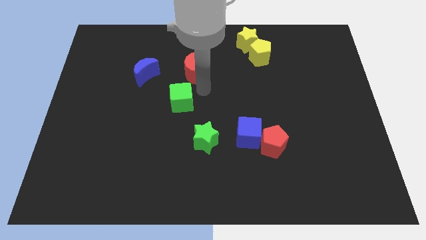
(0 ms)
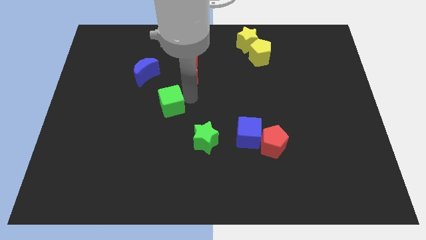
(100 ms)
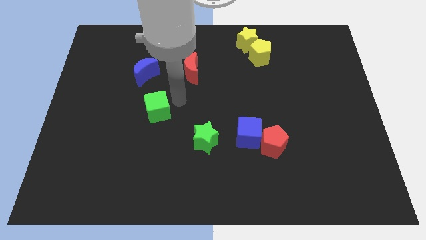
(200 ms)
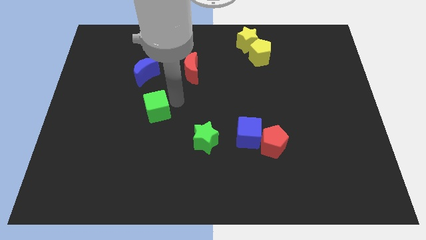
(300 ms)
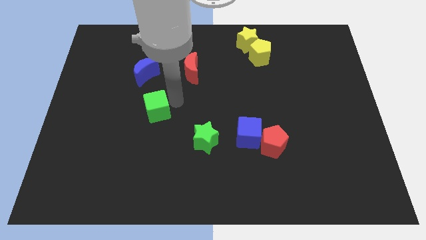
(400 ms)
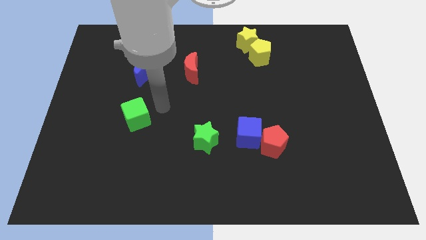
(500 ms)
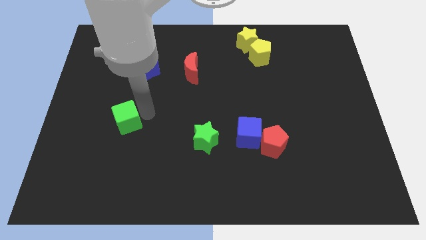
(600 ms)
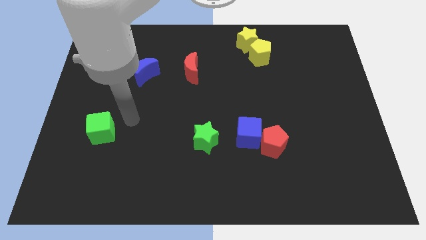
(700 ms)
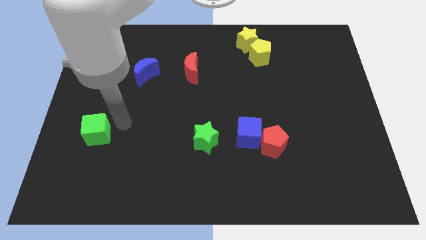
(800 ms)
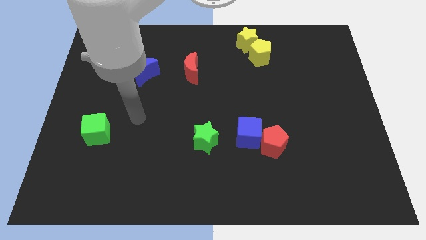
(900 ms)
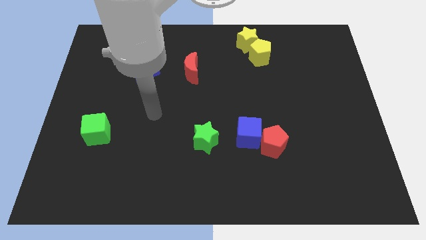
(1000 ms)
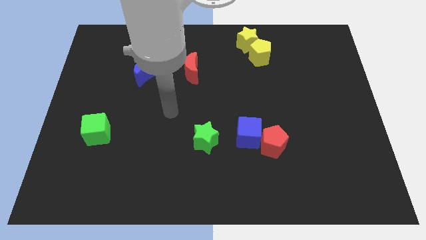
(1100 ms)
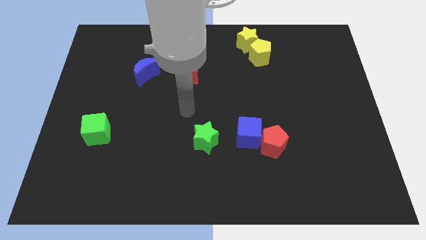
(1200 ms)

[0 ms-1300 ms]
drag the green cube to the left center of the board

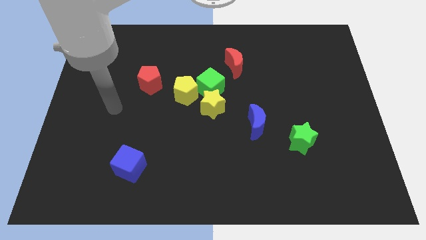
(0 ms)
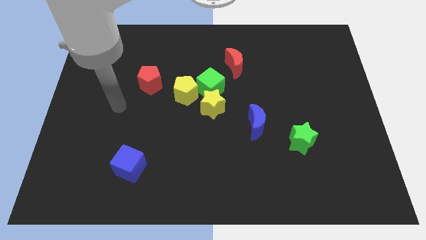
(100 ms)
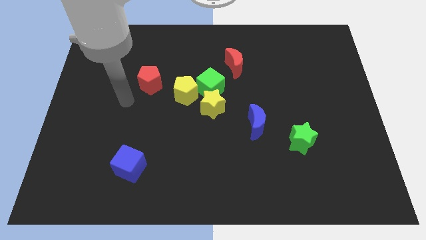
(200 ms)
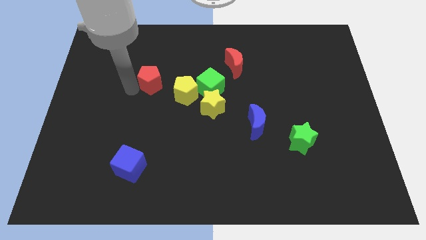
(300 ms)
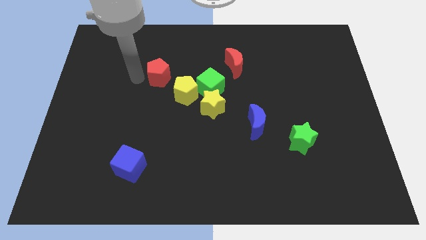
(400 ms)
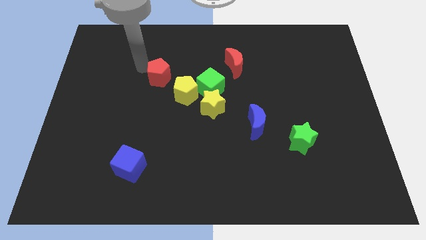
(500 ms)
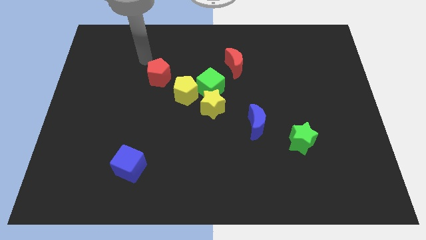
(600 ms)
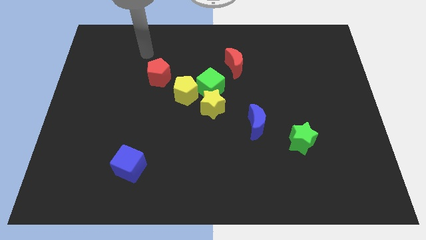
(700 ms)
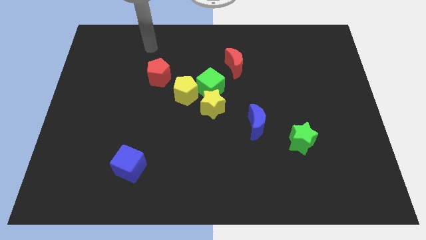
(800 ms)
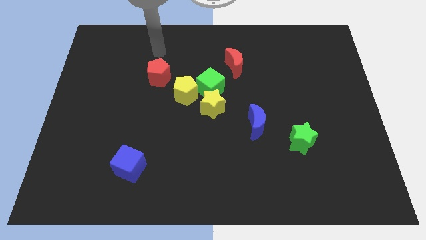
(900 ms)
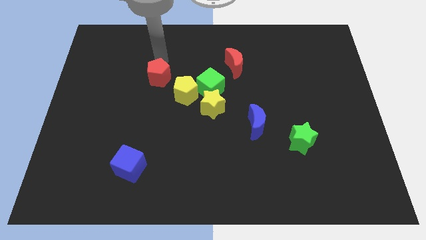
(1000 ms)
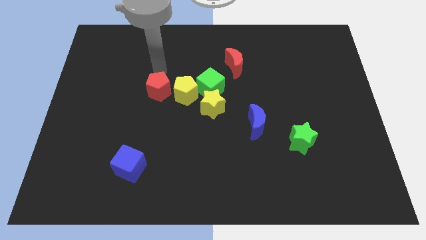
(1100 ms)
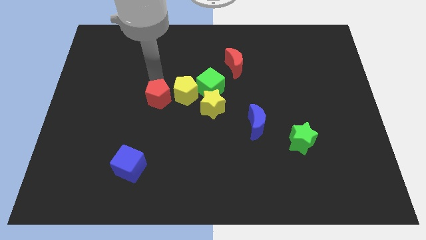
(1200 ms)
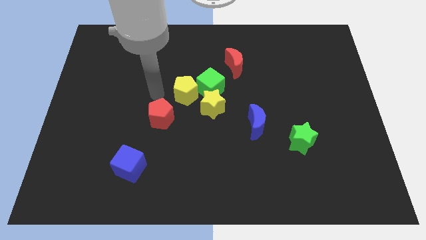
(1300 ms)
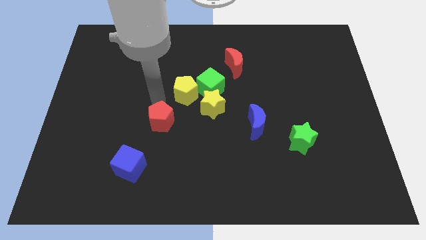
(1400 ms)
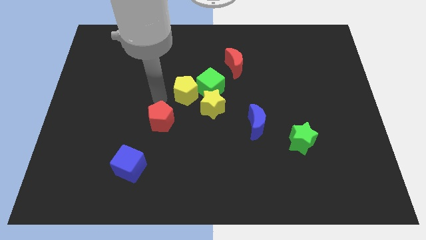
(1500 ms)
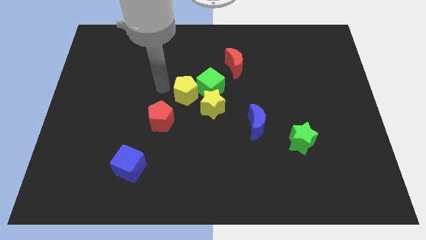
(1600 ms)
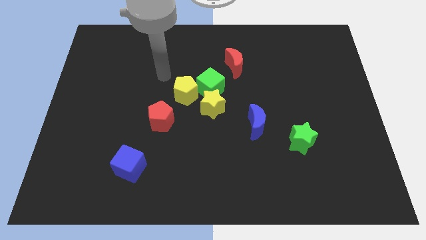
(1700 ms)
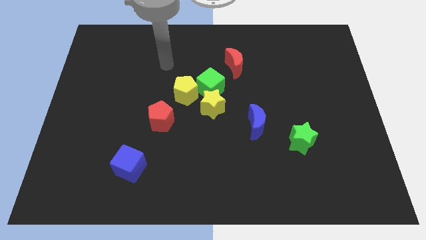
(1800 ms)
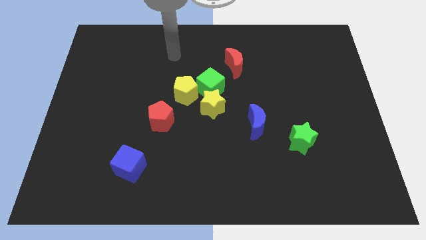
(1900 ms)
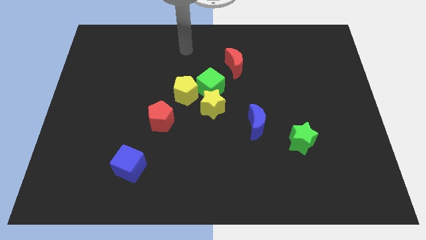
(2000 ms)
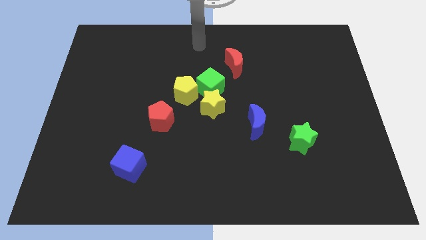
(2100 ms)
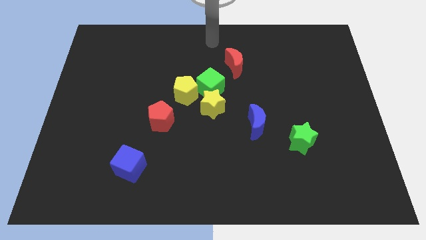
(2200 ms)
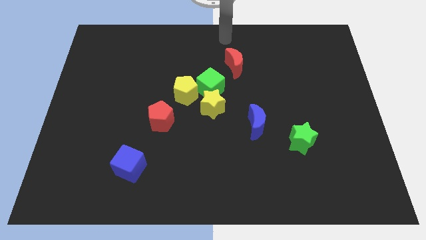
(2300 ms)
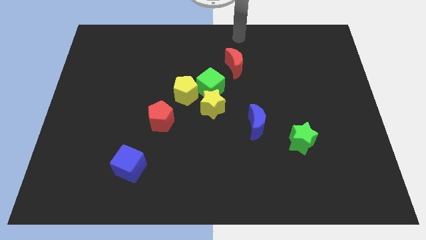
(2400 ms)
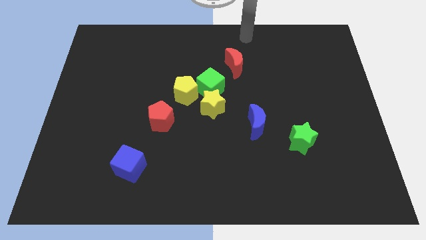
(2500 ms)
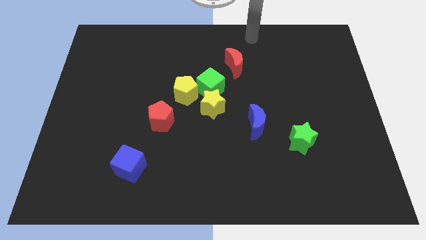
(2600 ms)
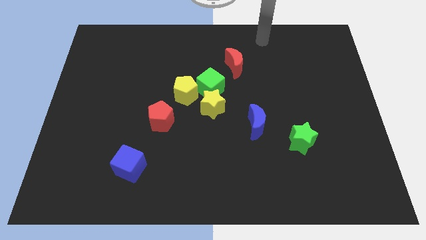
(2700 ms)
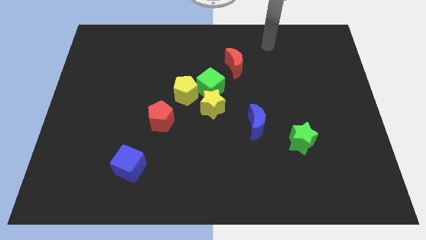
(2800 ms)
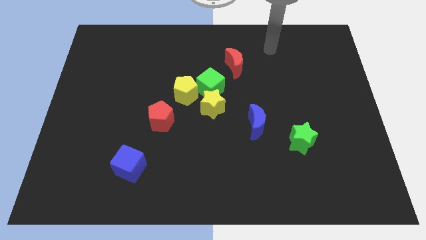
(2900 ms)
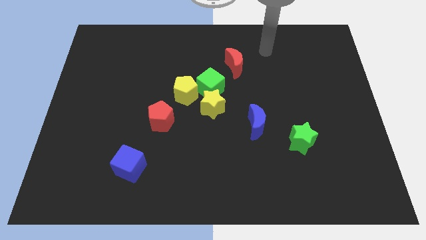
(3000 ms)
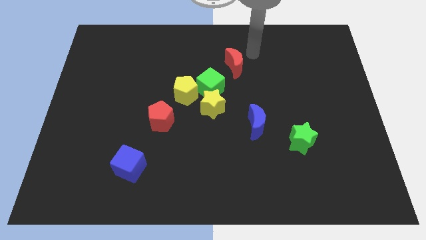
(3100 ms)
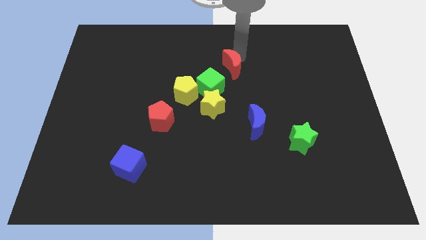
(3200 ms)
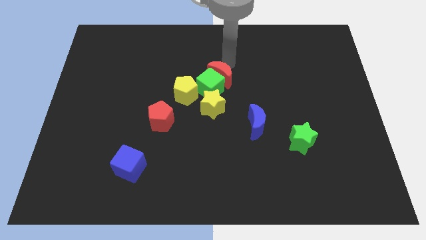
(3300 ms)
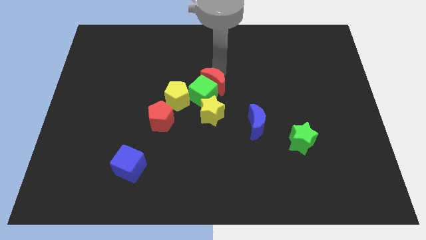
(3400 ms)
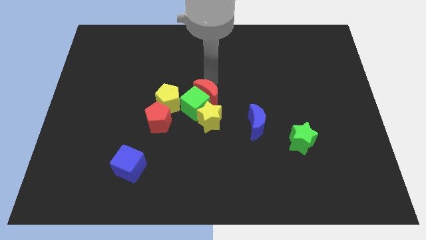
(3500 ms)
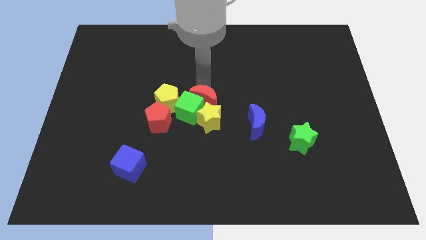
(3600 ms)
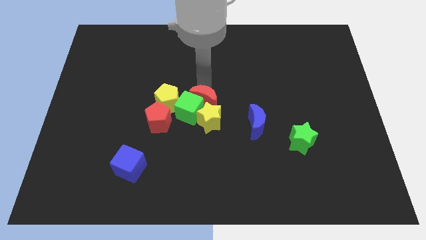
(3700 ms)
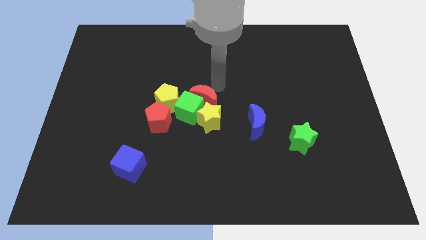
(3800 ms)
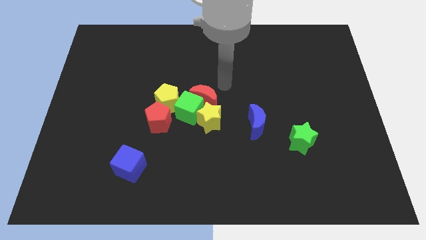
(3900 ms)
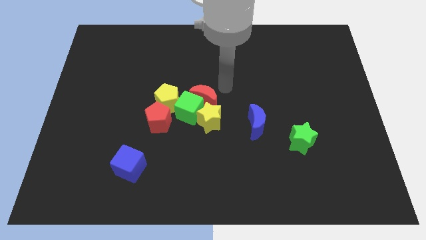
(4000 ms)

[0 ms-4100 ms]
push the red crescent into the green cube

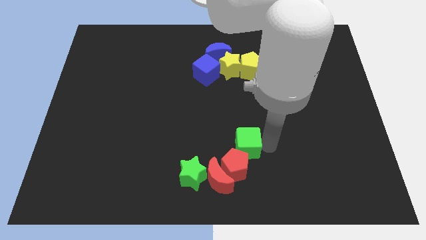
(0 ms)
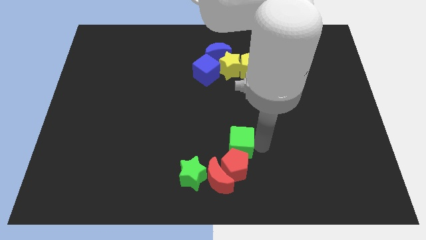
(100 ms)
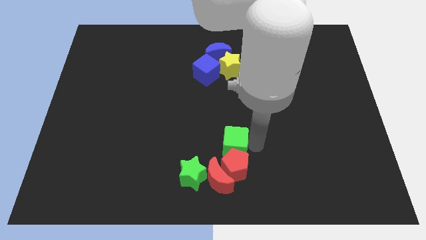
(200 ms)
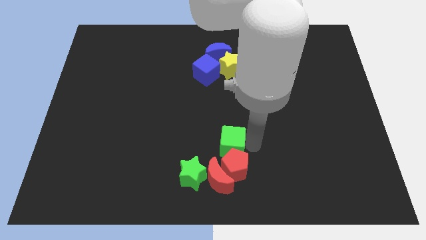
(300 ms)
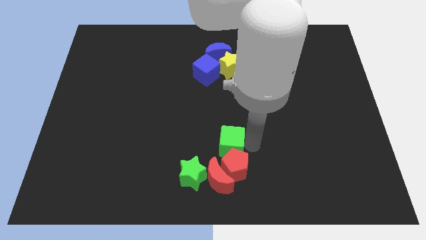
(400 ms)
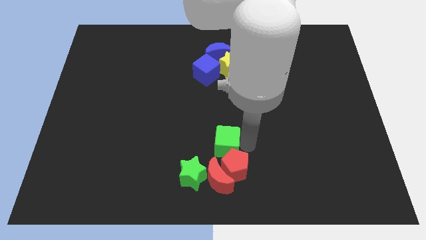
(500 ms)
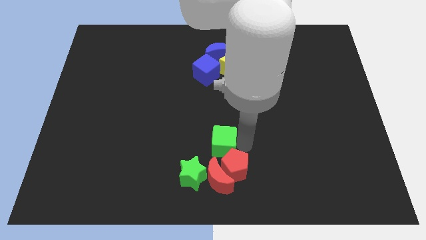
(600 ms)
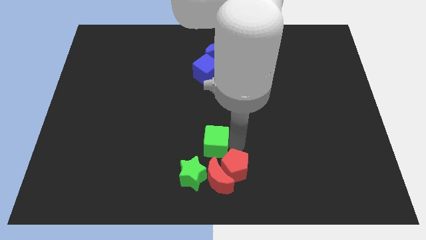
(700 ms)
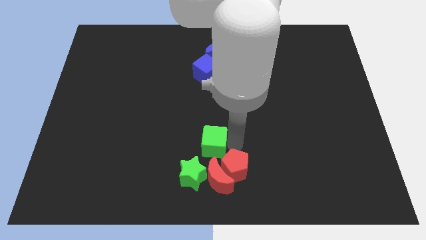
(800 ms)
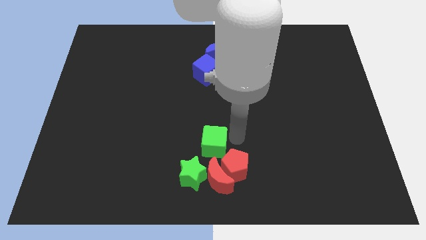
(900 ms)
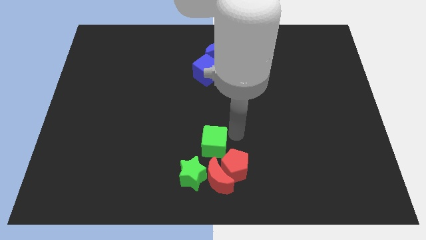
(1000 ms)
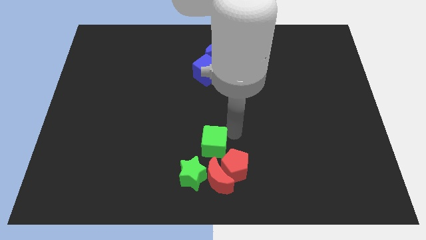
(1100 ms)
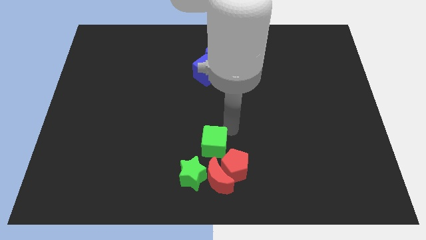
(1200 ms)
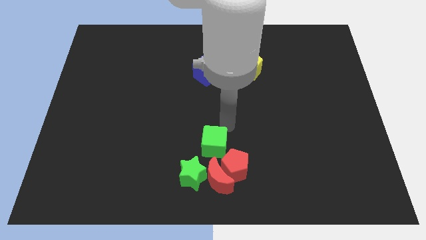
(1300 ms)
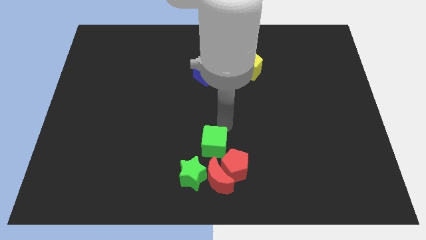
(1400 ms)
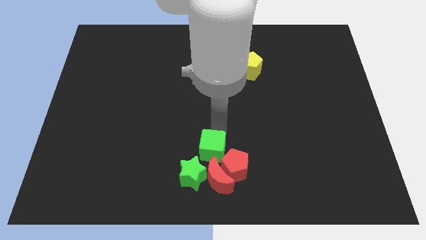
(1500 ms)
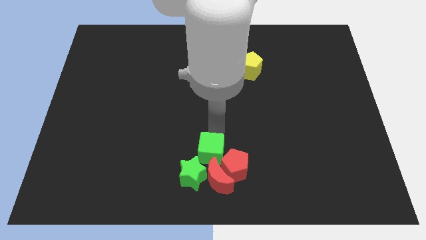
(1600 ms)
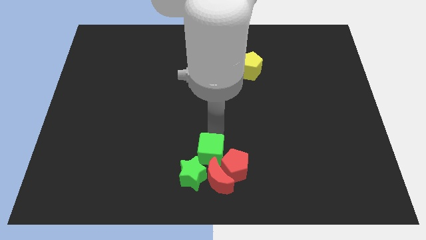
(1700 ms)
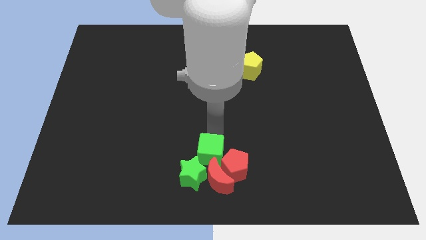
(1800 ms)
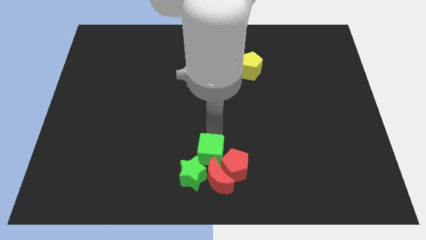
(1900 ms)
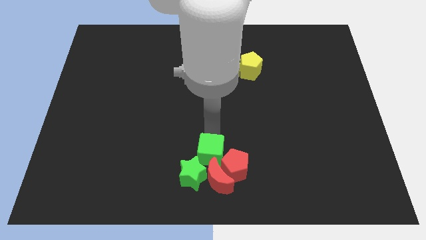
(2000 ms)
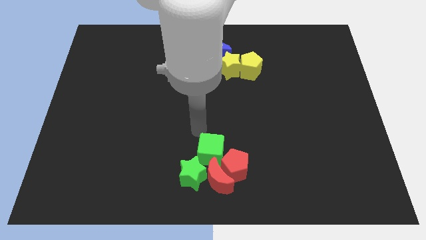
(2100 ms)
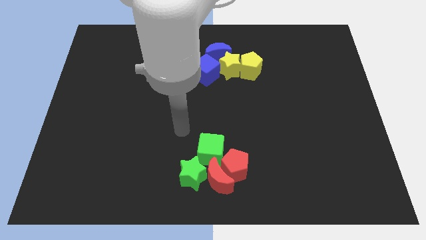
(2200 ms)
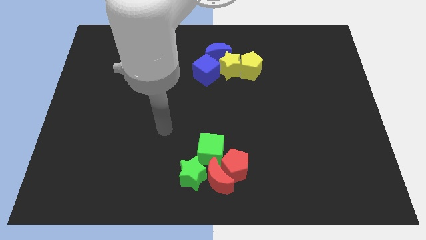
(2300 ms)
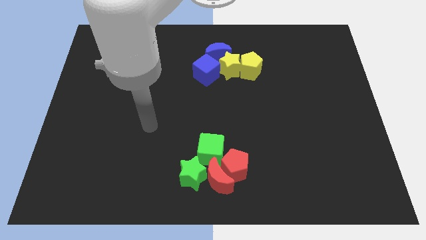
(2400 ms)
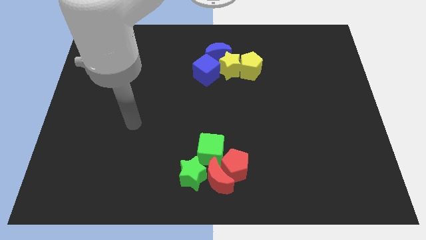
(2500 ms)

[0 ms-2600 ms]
push the green cube above the green star and red blocks

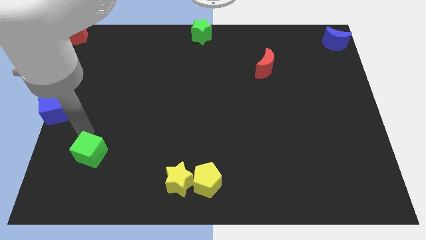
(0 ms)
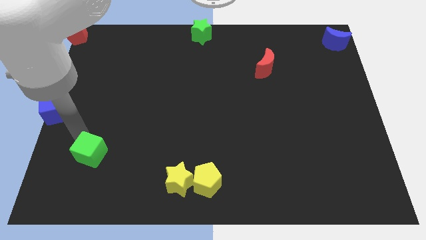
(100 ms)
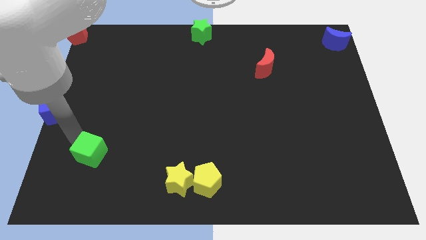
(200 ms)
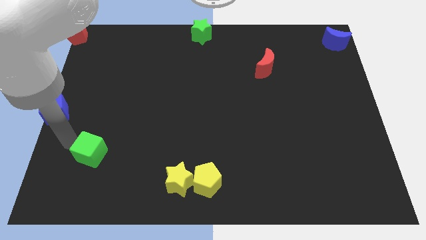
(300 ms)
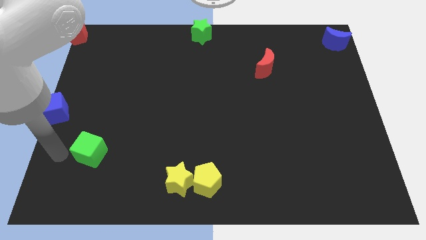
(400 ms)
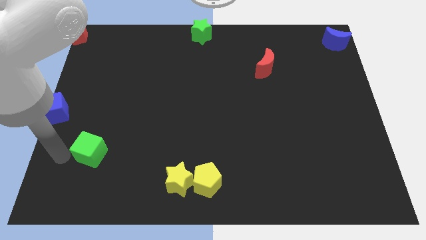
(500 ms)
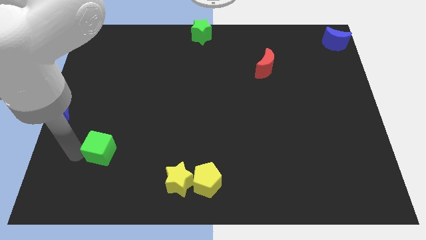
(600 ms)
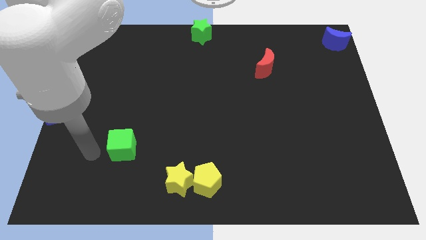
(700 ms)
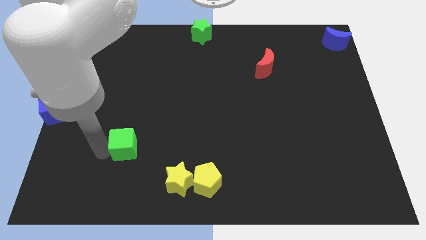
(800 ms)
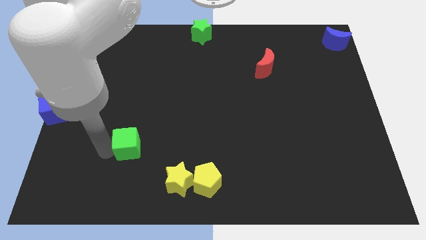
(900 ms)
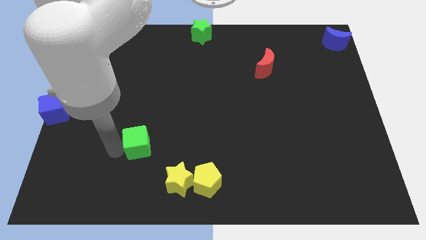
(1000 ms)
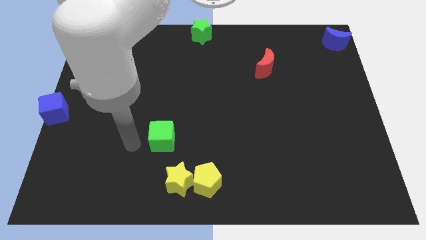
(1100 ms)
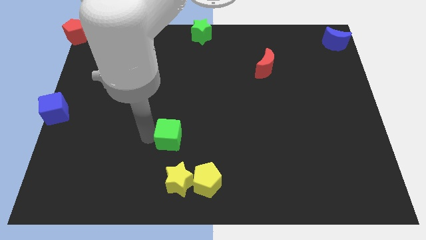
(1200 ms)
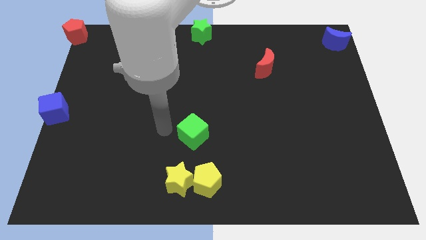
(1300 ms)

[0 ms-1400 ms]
place the green cube below the green star
